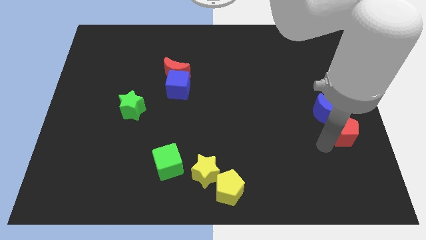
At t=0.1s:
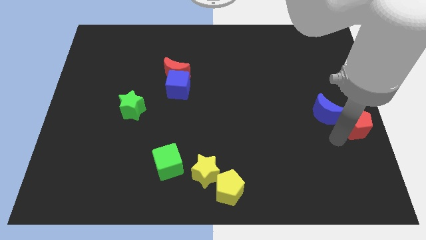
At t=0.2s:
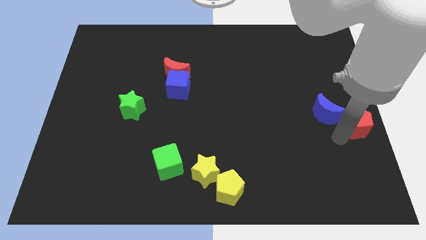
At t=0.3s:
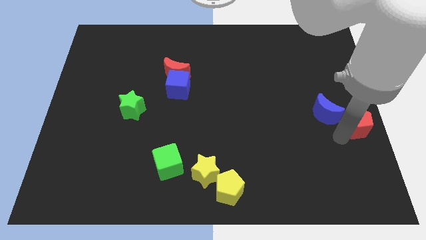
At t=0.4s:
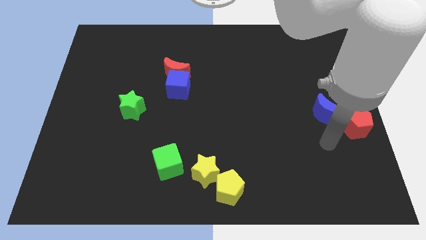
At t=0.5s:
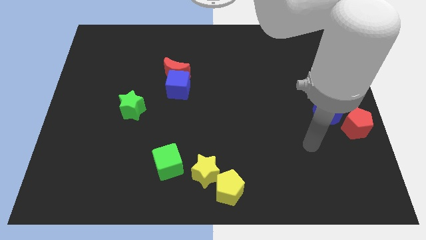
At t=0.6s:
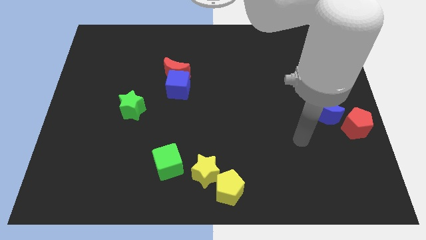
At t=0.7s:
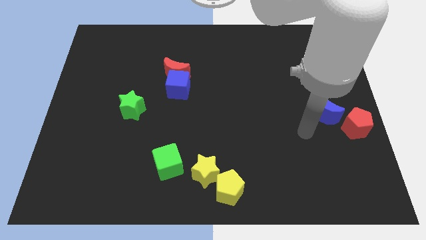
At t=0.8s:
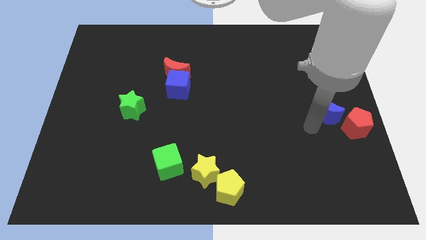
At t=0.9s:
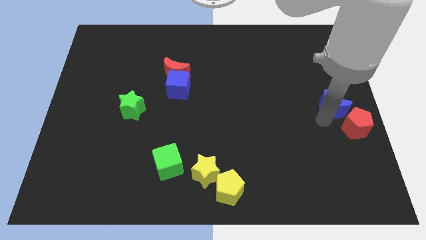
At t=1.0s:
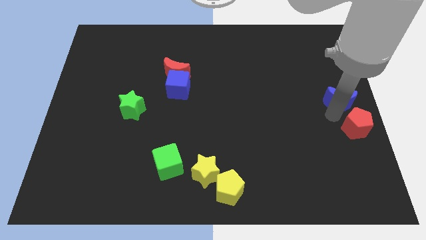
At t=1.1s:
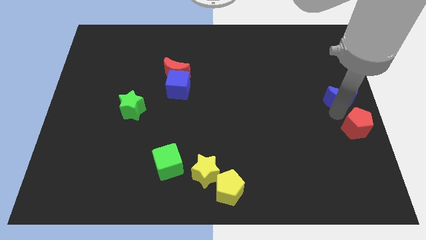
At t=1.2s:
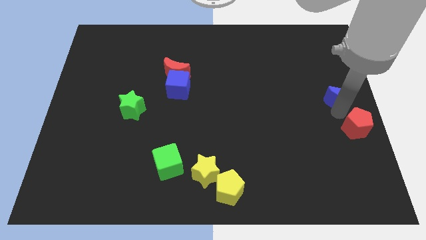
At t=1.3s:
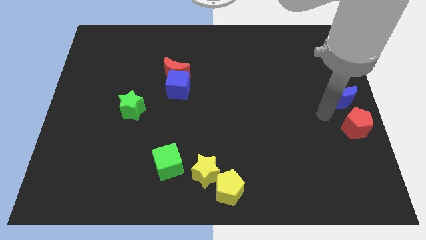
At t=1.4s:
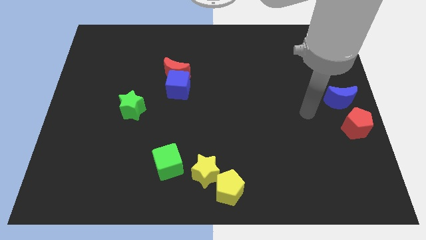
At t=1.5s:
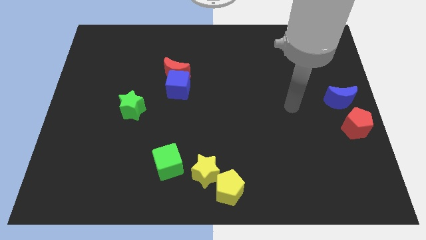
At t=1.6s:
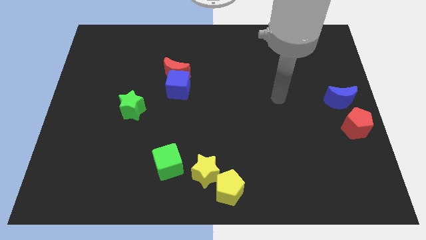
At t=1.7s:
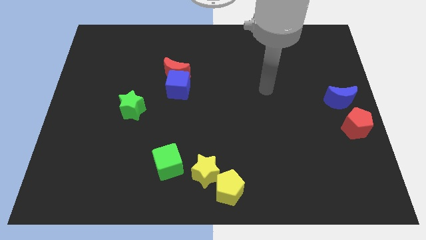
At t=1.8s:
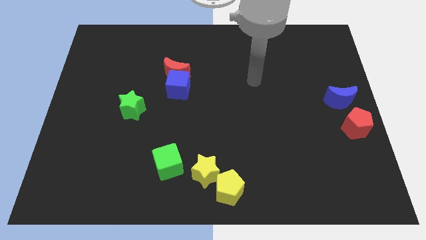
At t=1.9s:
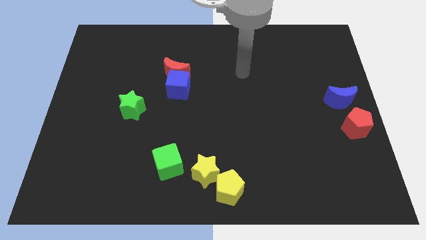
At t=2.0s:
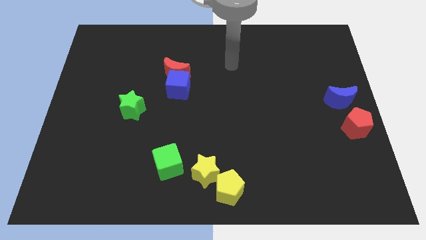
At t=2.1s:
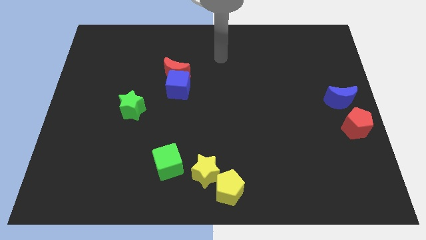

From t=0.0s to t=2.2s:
move arm towards the top center

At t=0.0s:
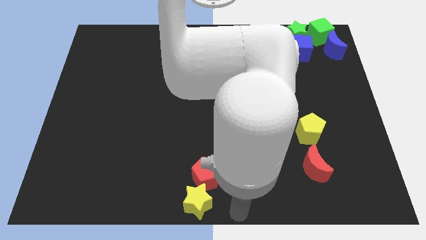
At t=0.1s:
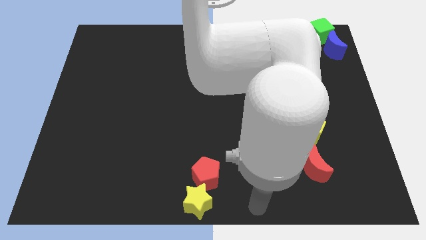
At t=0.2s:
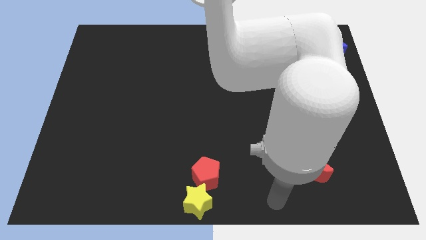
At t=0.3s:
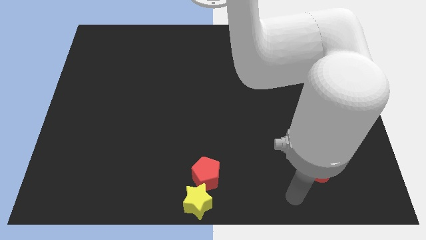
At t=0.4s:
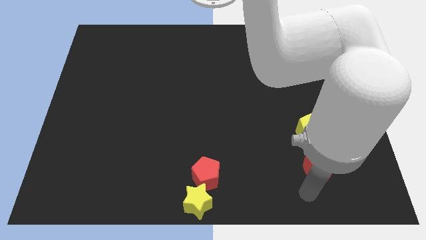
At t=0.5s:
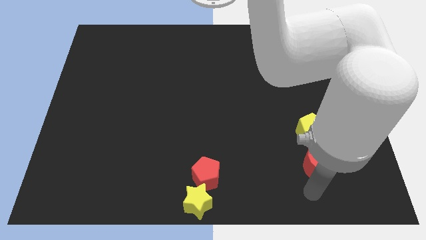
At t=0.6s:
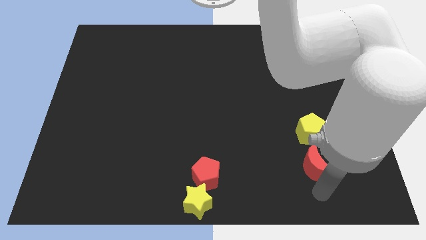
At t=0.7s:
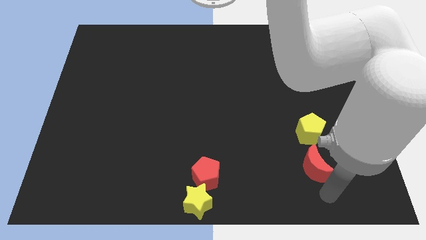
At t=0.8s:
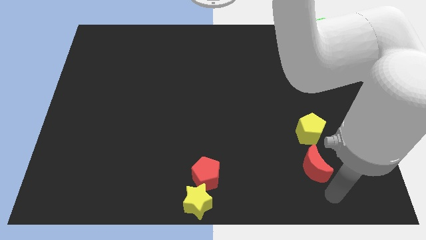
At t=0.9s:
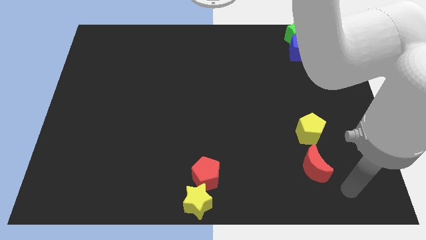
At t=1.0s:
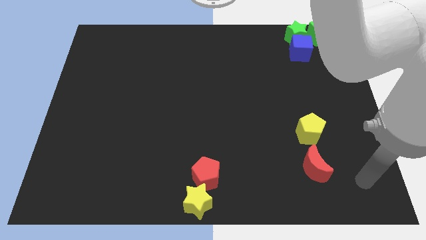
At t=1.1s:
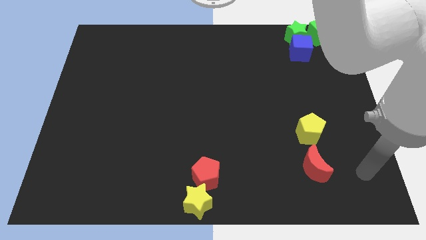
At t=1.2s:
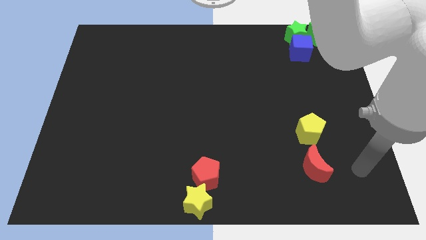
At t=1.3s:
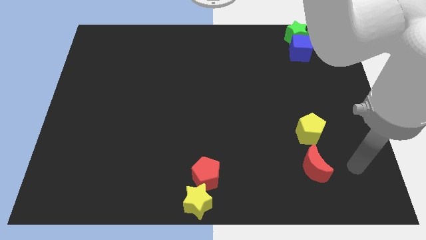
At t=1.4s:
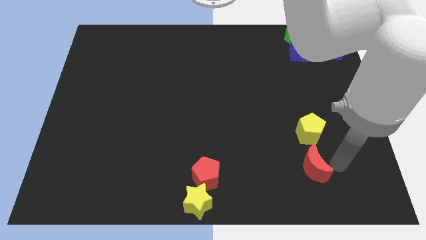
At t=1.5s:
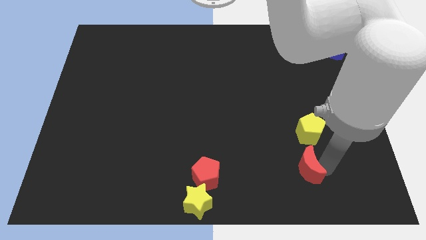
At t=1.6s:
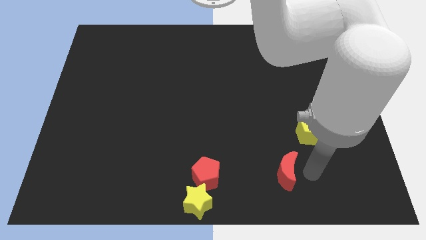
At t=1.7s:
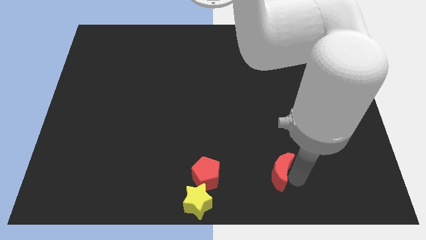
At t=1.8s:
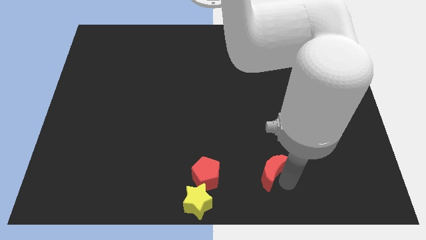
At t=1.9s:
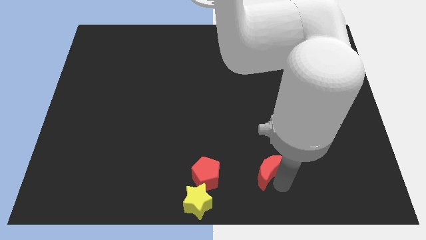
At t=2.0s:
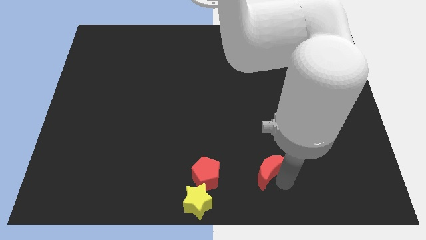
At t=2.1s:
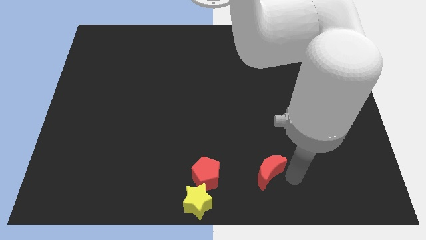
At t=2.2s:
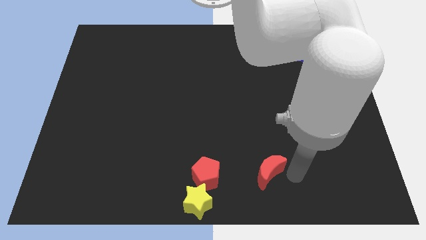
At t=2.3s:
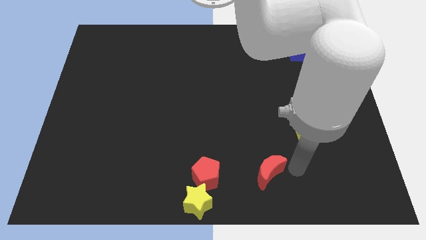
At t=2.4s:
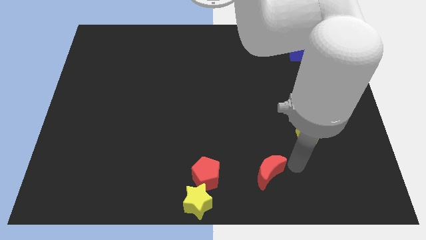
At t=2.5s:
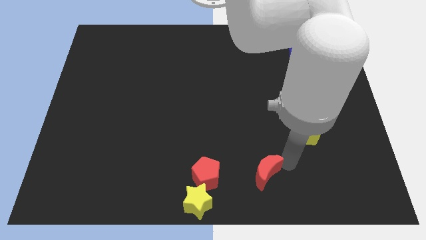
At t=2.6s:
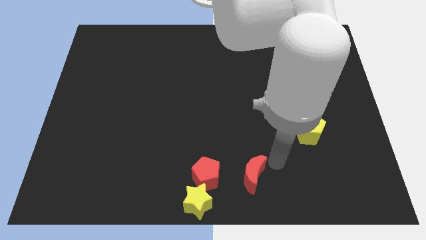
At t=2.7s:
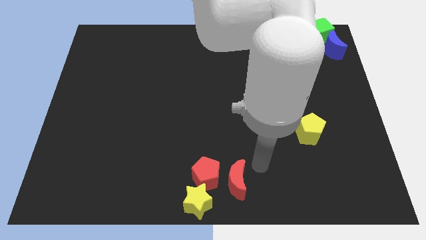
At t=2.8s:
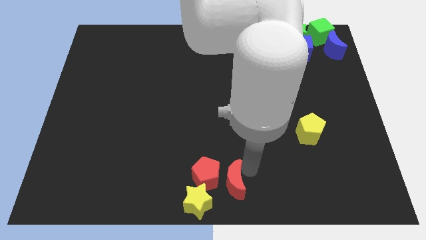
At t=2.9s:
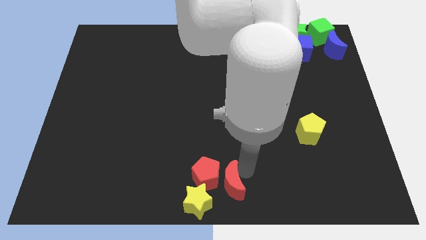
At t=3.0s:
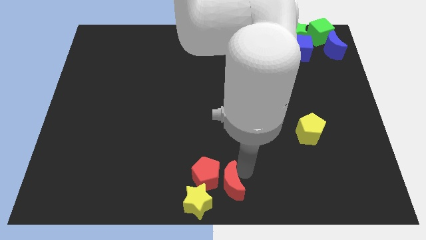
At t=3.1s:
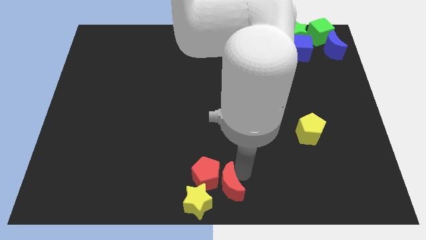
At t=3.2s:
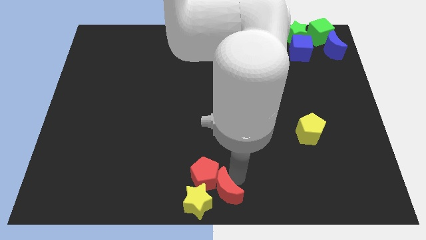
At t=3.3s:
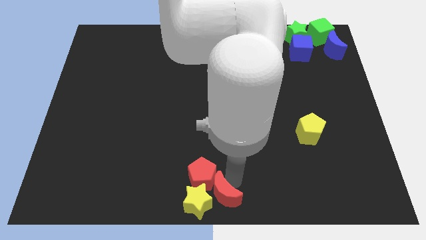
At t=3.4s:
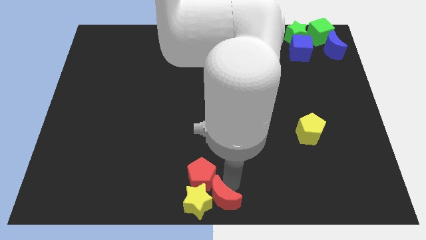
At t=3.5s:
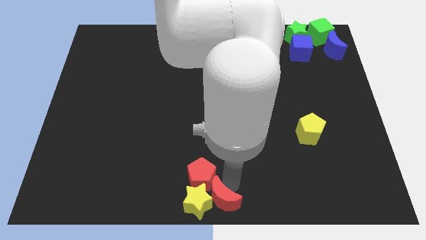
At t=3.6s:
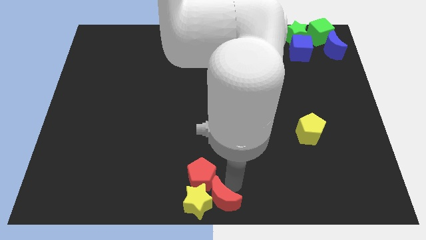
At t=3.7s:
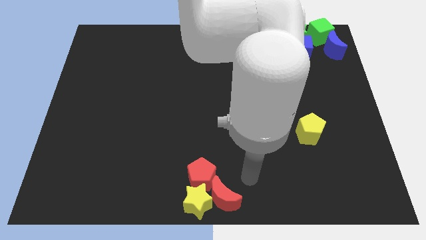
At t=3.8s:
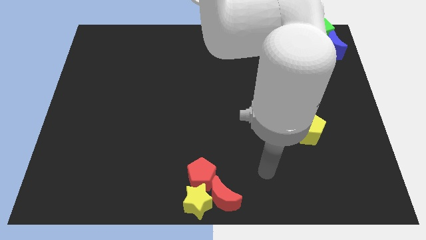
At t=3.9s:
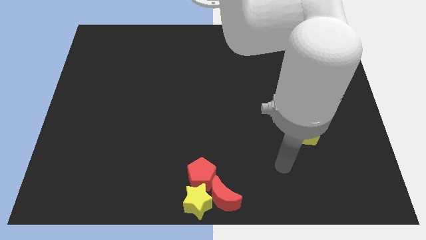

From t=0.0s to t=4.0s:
push the red crescent towards the yellow star

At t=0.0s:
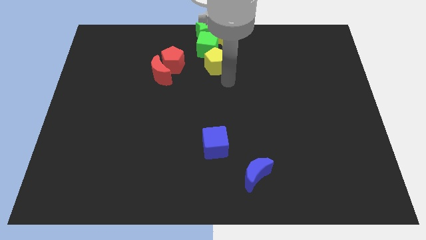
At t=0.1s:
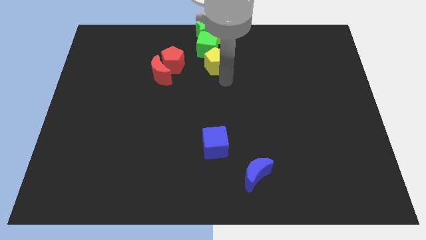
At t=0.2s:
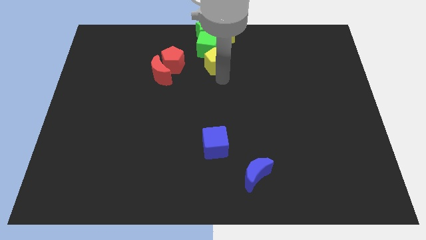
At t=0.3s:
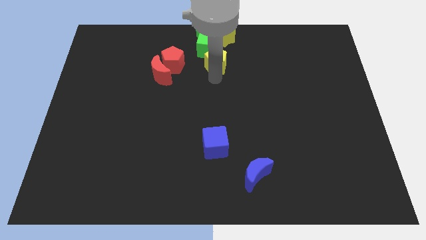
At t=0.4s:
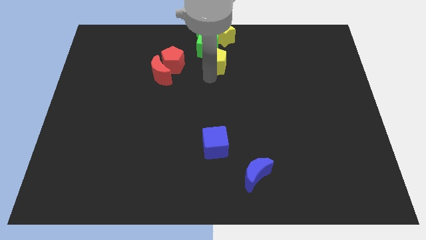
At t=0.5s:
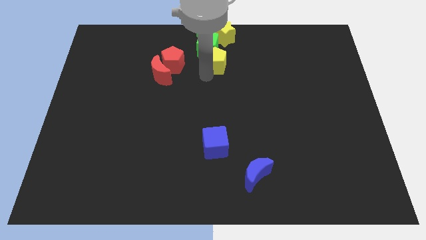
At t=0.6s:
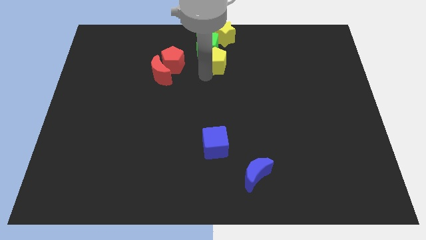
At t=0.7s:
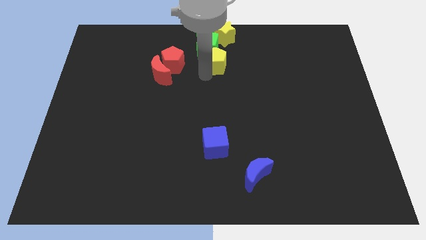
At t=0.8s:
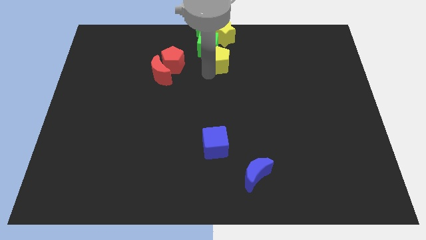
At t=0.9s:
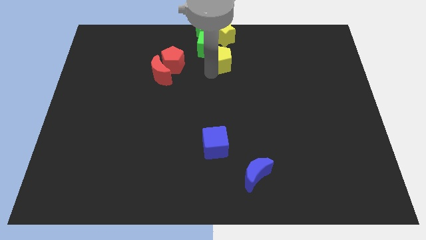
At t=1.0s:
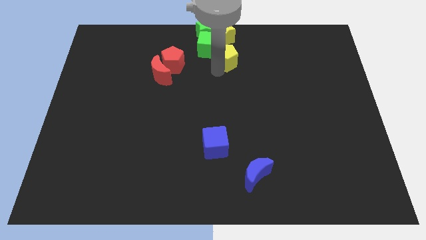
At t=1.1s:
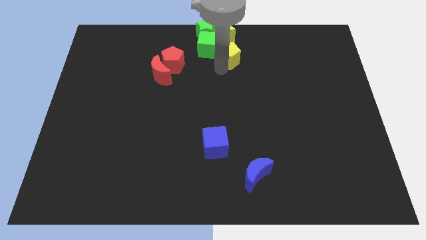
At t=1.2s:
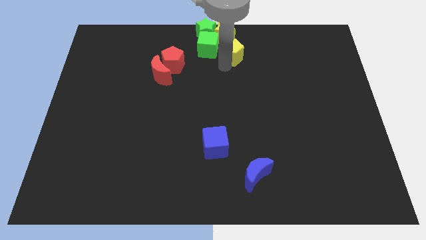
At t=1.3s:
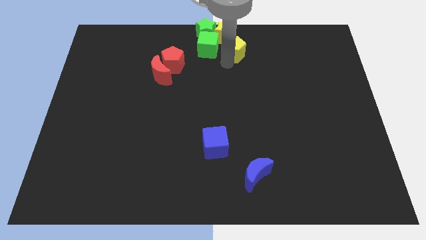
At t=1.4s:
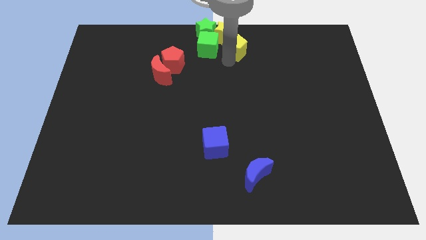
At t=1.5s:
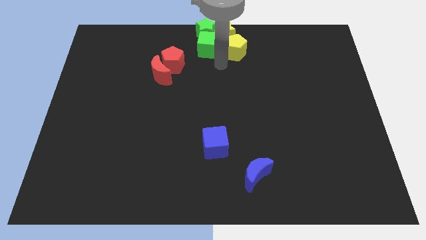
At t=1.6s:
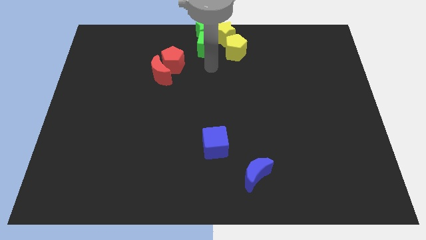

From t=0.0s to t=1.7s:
move the yellow pentagon right to the green cube

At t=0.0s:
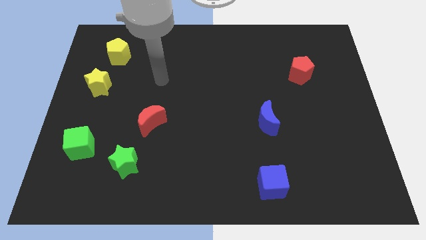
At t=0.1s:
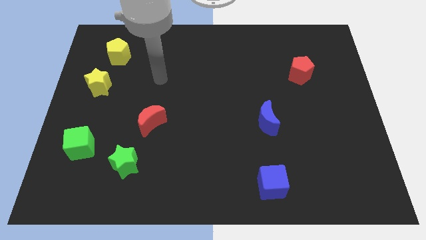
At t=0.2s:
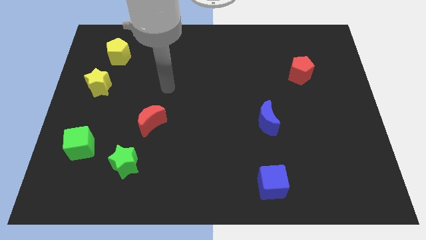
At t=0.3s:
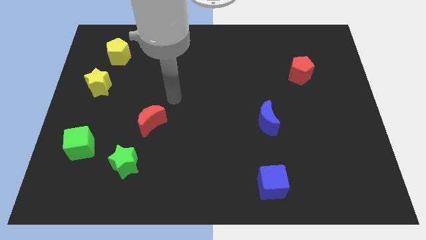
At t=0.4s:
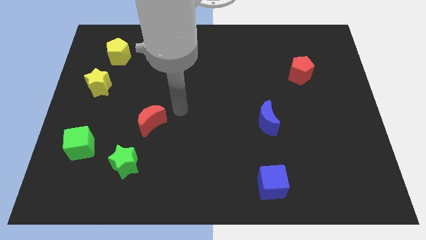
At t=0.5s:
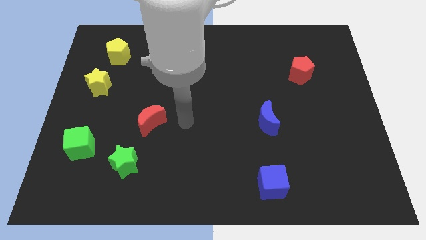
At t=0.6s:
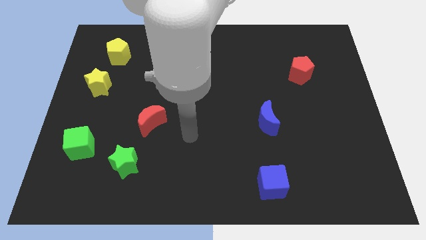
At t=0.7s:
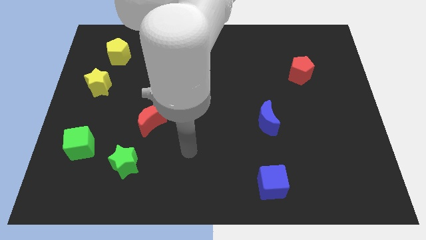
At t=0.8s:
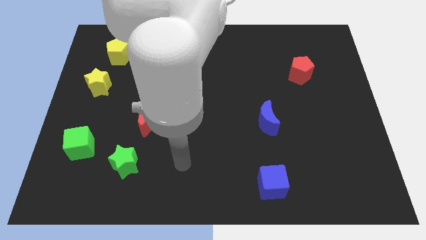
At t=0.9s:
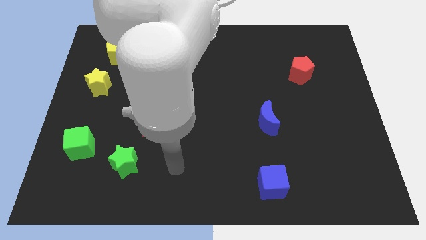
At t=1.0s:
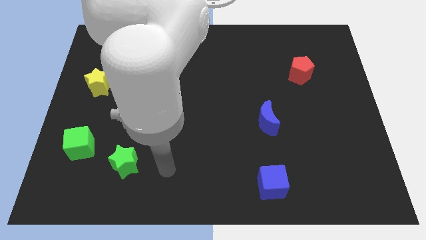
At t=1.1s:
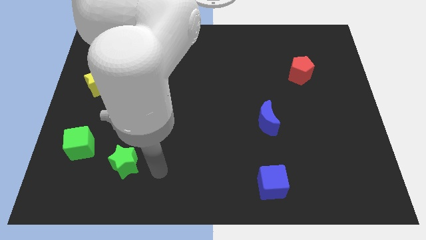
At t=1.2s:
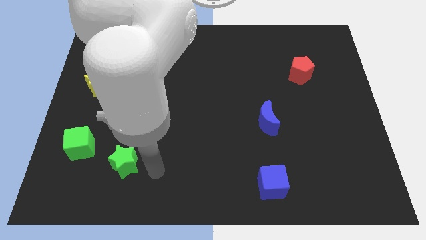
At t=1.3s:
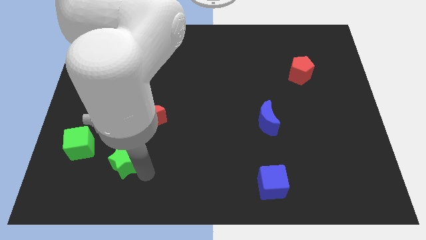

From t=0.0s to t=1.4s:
place your arm to the right of green star
